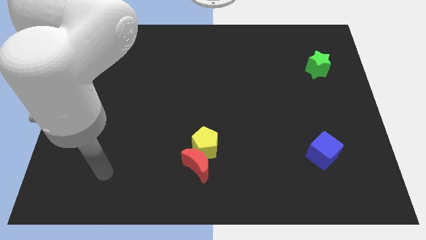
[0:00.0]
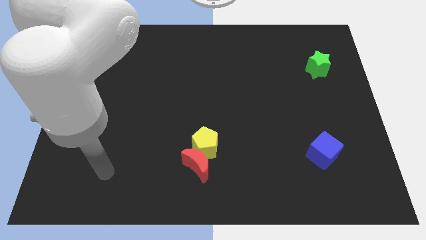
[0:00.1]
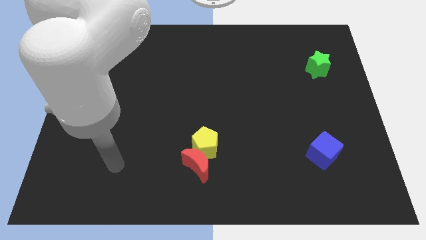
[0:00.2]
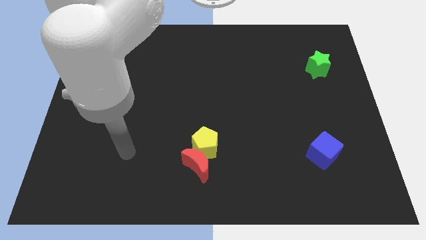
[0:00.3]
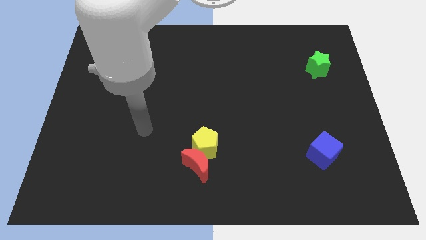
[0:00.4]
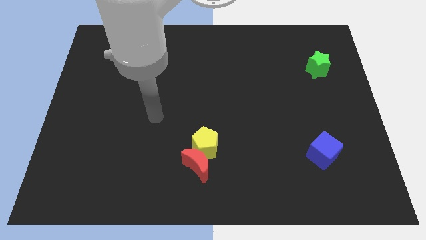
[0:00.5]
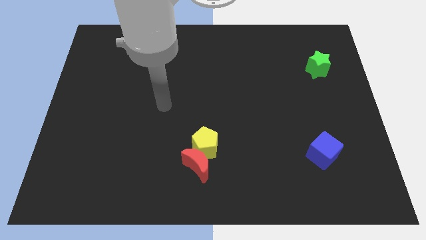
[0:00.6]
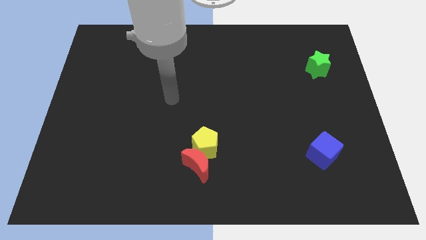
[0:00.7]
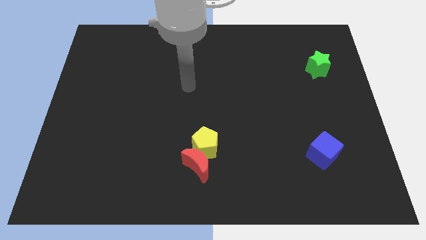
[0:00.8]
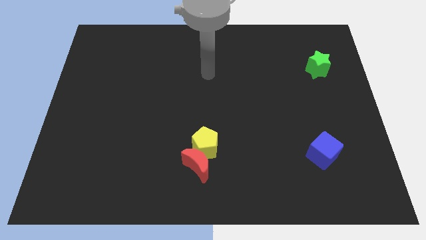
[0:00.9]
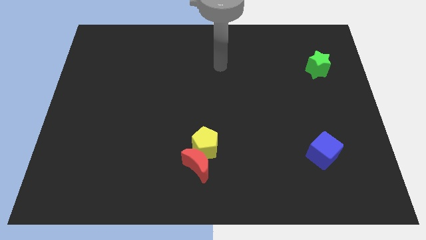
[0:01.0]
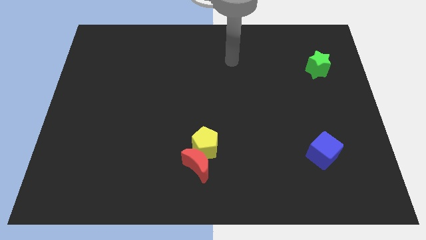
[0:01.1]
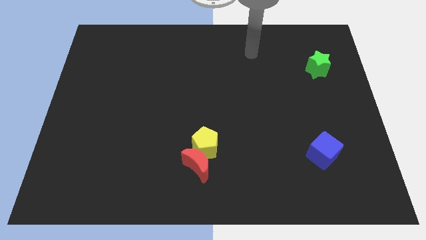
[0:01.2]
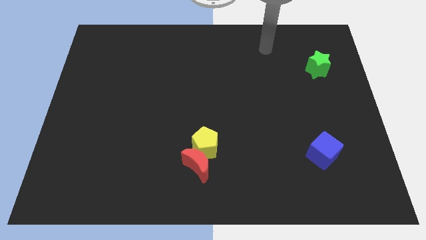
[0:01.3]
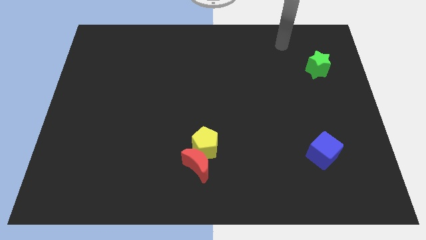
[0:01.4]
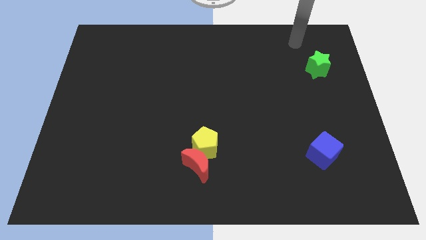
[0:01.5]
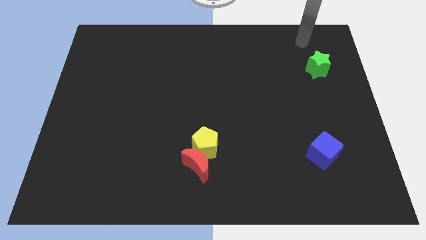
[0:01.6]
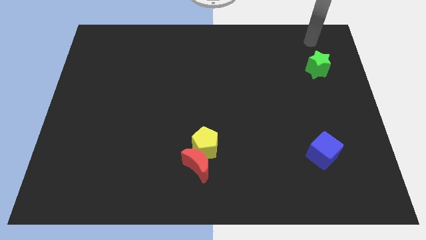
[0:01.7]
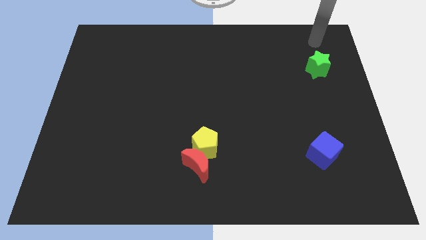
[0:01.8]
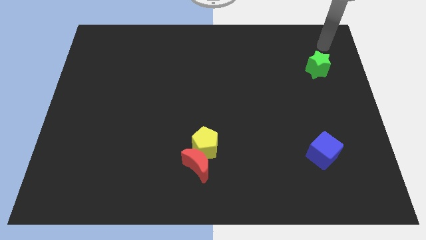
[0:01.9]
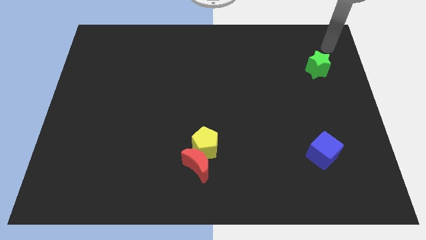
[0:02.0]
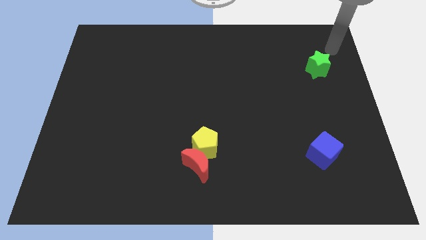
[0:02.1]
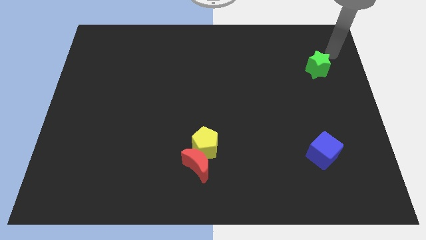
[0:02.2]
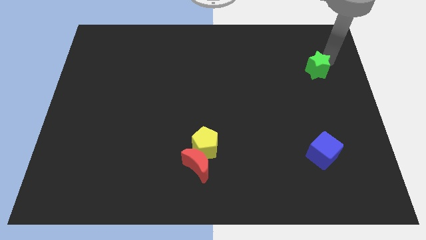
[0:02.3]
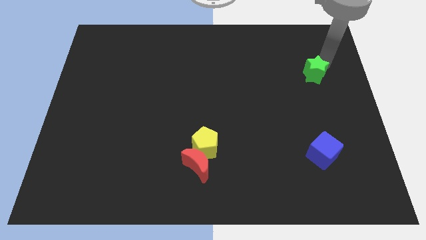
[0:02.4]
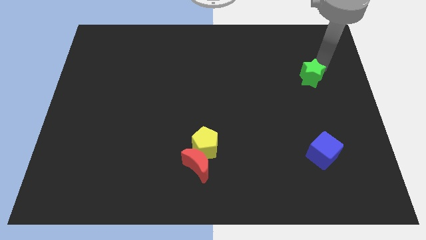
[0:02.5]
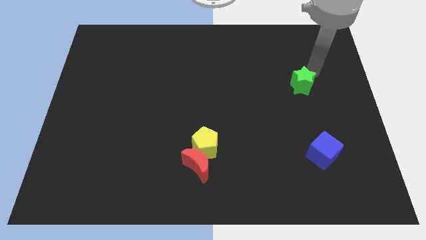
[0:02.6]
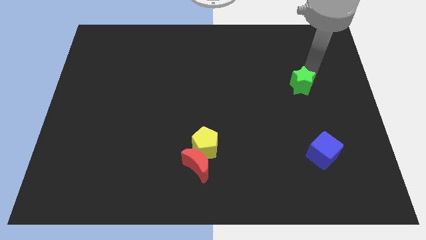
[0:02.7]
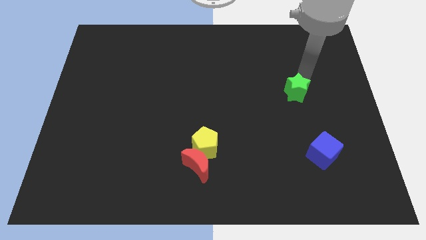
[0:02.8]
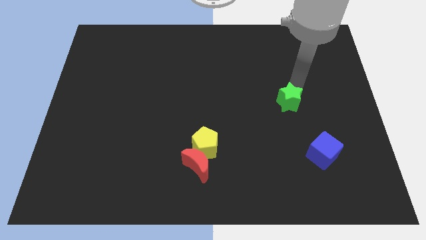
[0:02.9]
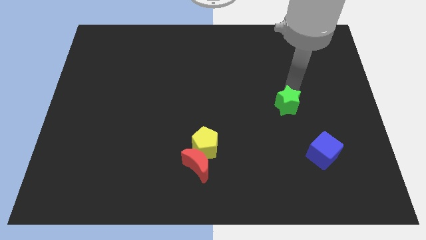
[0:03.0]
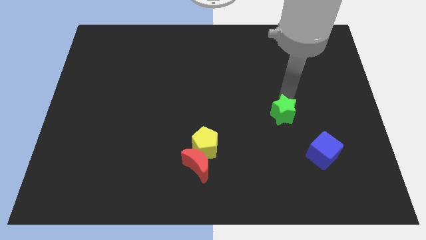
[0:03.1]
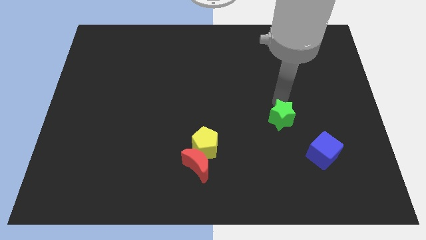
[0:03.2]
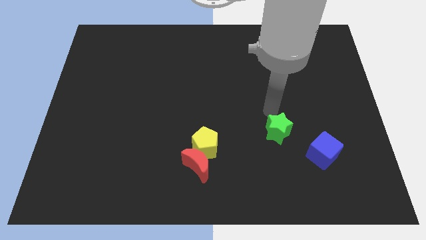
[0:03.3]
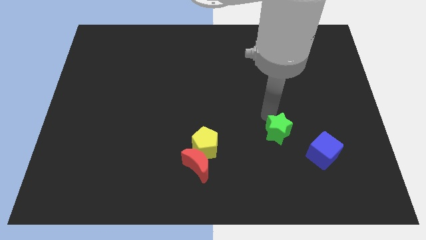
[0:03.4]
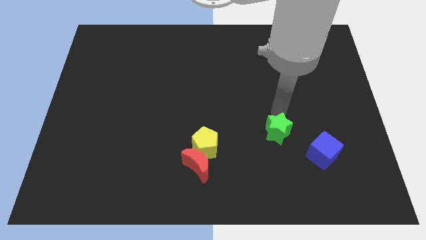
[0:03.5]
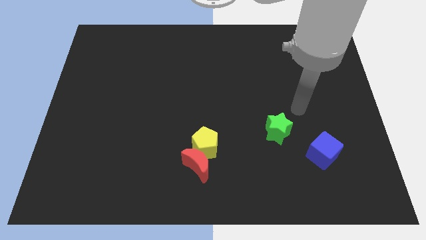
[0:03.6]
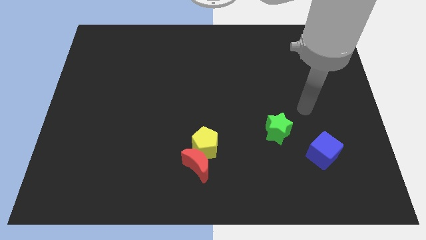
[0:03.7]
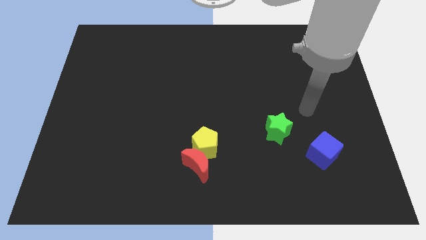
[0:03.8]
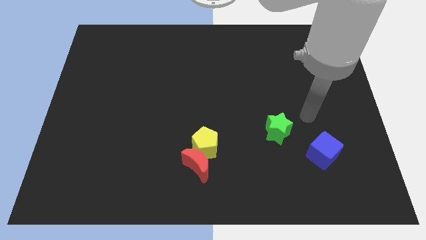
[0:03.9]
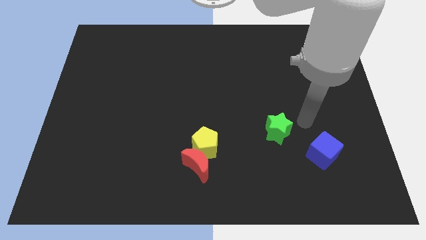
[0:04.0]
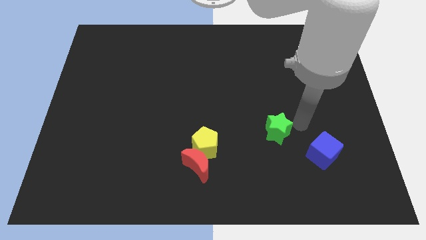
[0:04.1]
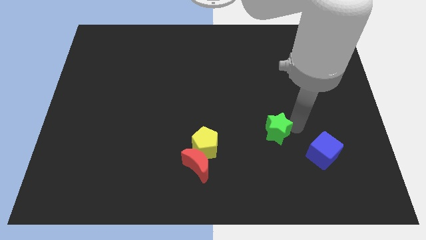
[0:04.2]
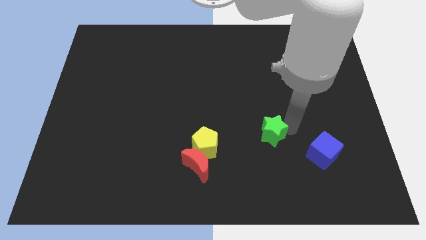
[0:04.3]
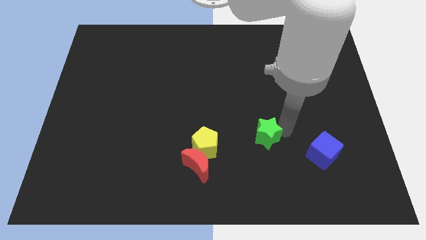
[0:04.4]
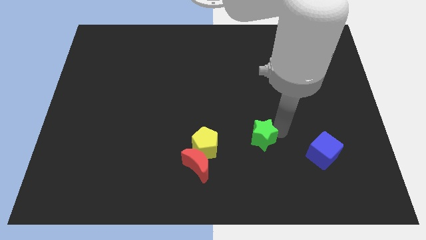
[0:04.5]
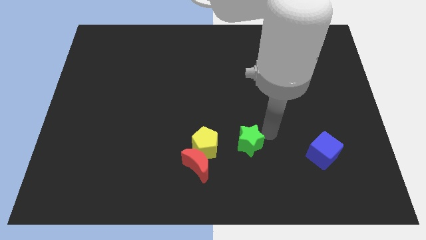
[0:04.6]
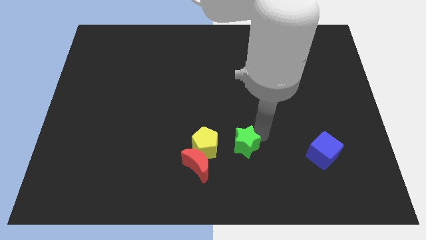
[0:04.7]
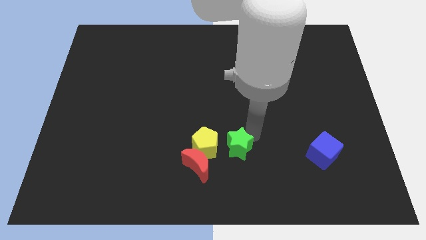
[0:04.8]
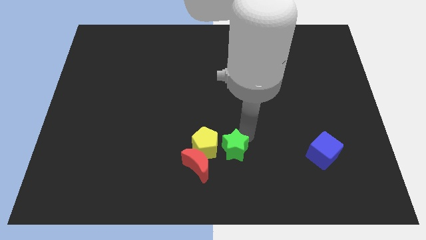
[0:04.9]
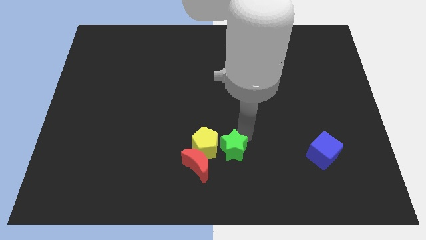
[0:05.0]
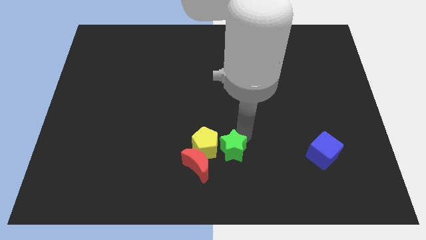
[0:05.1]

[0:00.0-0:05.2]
move the green block next to the yellow block

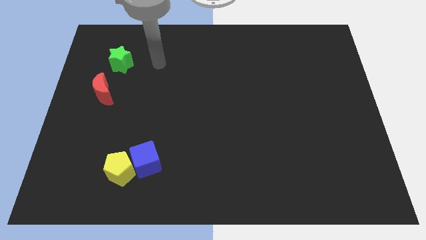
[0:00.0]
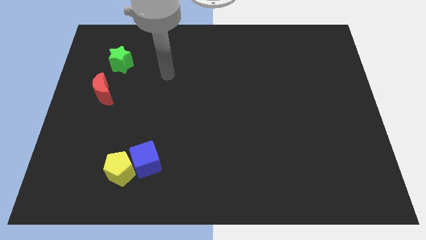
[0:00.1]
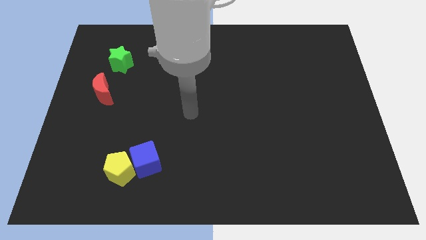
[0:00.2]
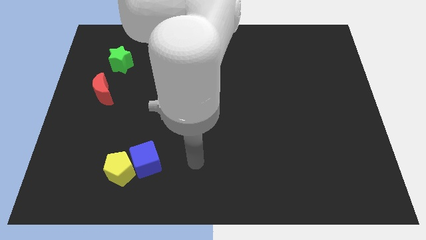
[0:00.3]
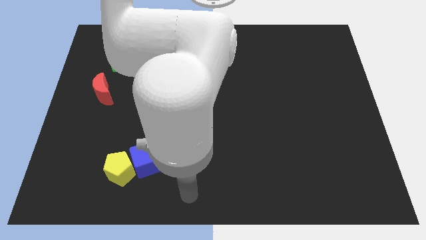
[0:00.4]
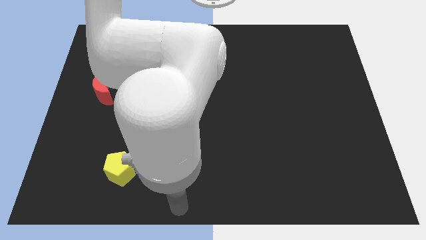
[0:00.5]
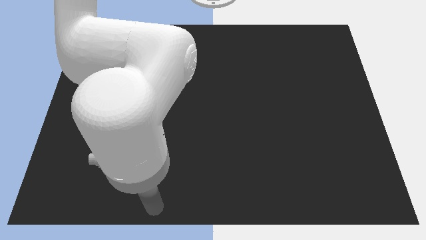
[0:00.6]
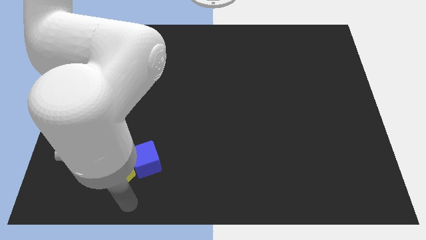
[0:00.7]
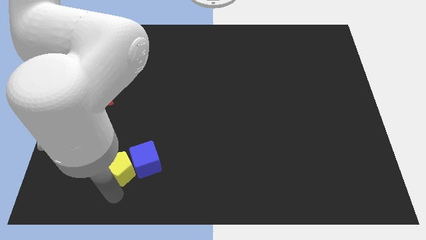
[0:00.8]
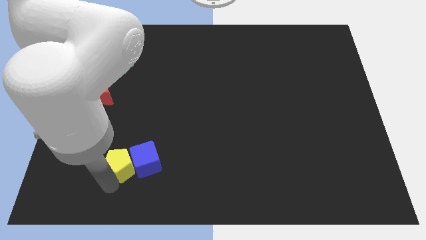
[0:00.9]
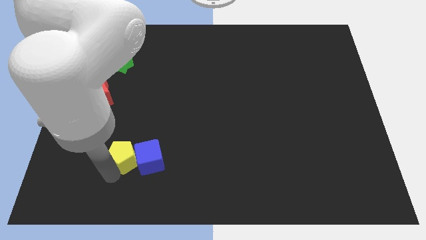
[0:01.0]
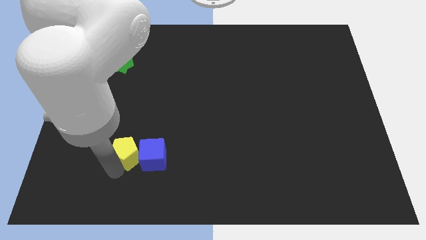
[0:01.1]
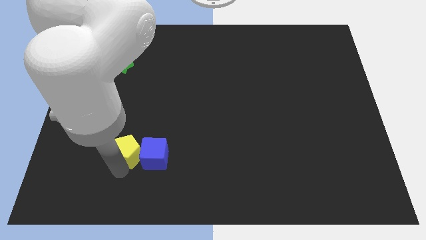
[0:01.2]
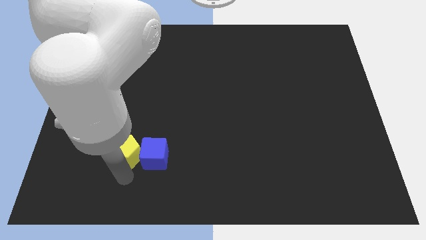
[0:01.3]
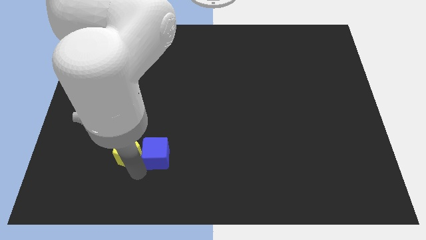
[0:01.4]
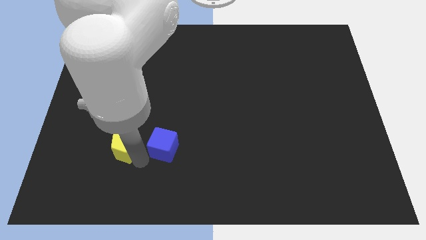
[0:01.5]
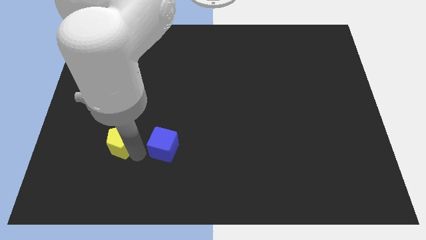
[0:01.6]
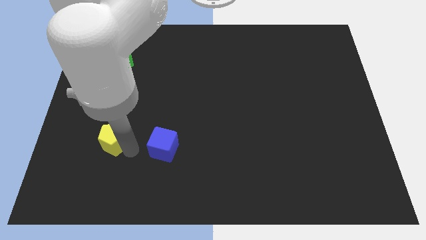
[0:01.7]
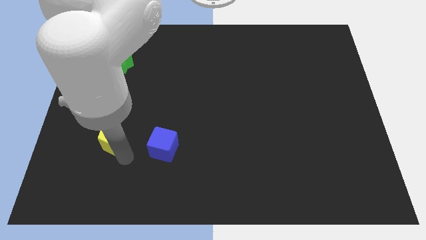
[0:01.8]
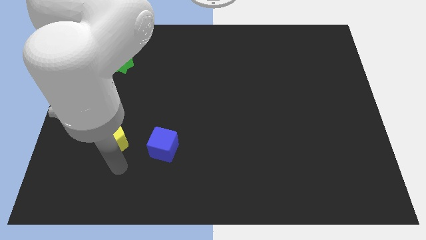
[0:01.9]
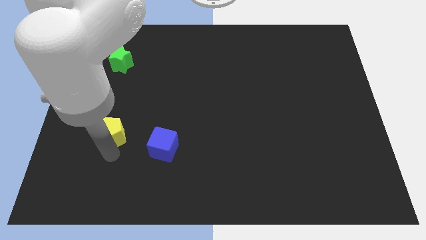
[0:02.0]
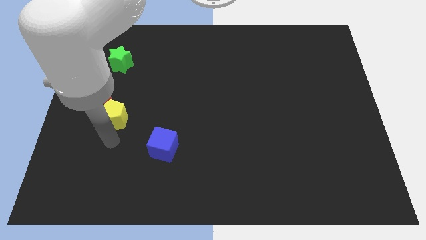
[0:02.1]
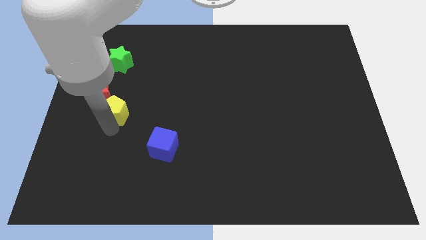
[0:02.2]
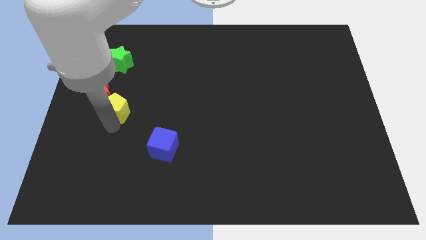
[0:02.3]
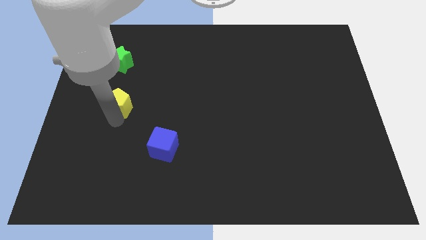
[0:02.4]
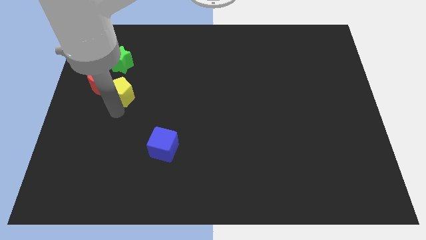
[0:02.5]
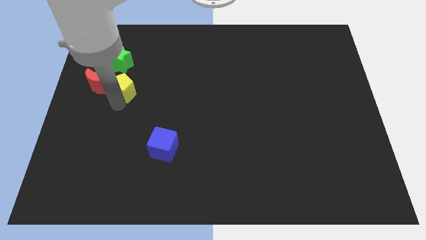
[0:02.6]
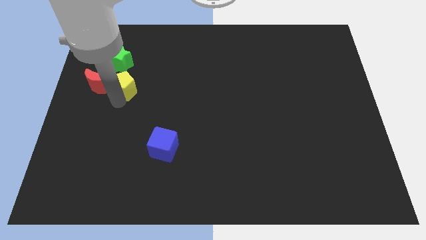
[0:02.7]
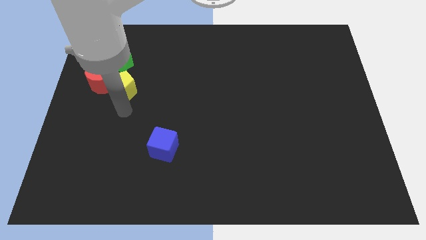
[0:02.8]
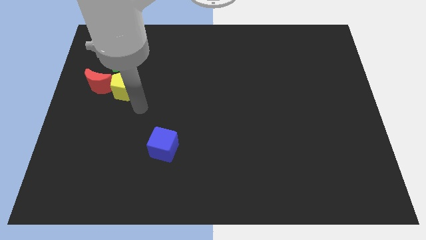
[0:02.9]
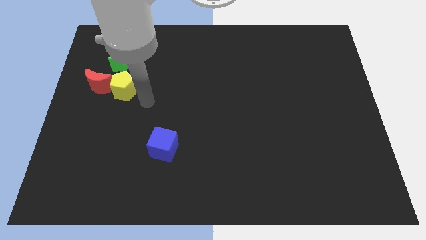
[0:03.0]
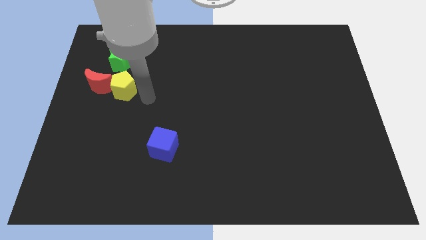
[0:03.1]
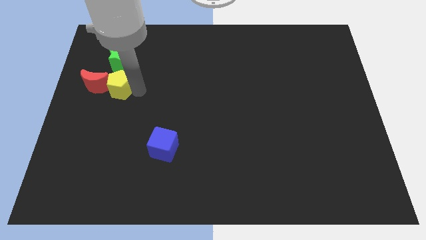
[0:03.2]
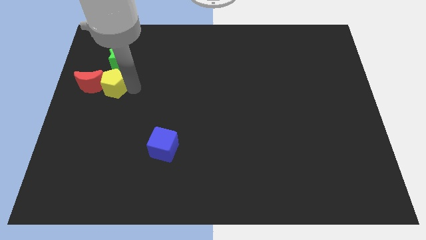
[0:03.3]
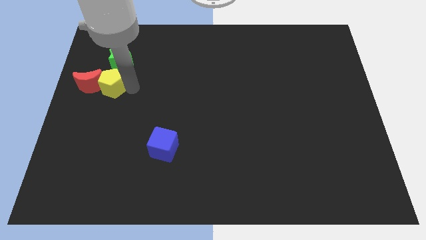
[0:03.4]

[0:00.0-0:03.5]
slide the yellow pentagon to the red block

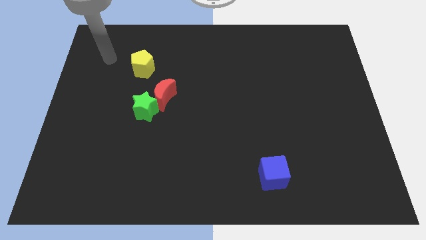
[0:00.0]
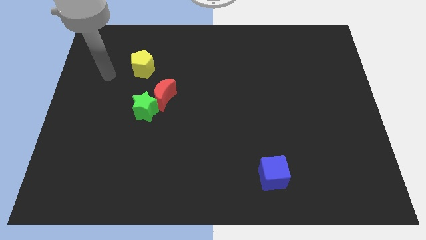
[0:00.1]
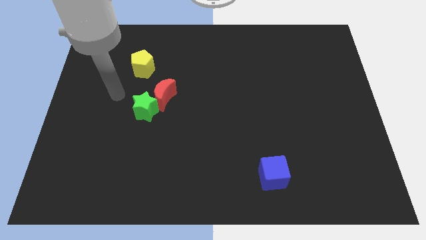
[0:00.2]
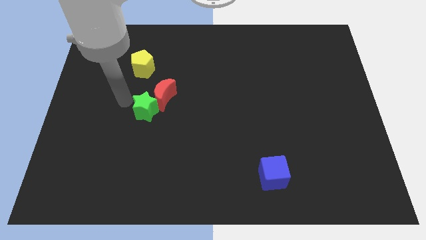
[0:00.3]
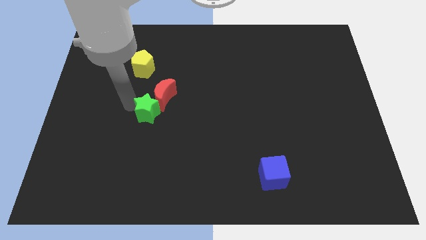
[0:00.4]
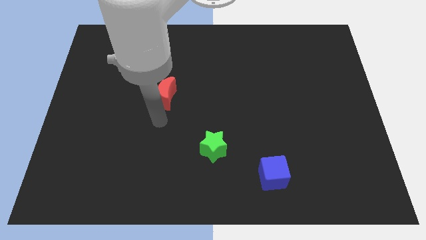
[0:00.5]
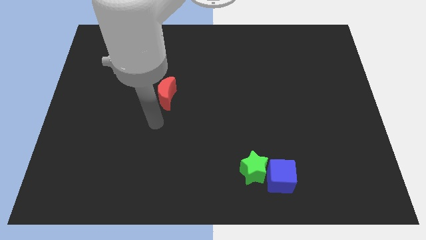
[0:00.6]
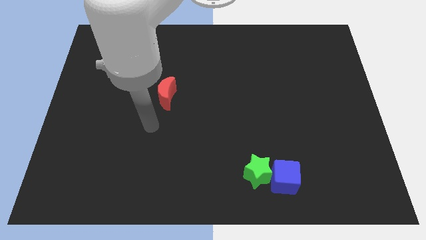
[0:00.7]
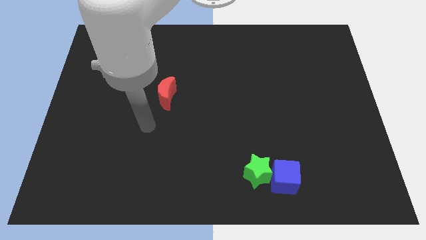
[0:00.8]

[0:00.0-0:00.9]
slide the green block towards the blue block
